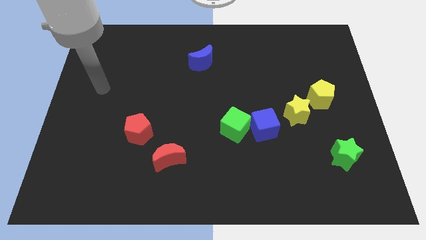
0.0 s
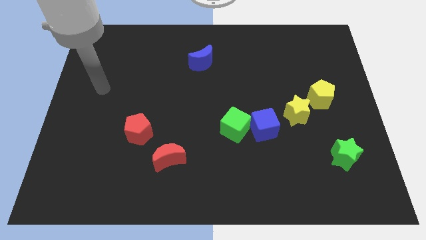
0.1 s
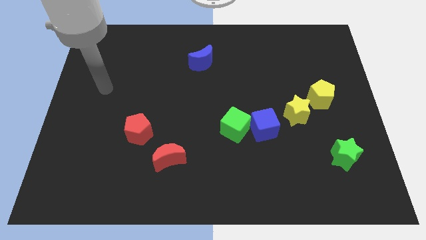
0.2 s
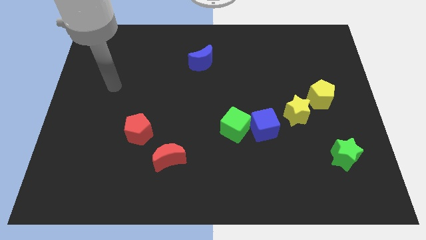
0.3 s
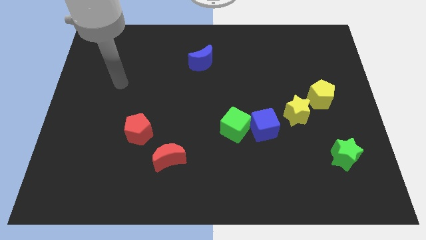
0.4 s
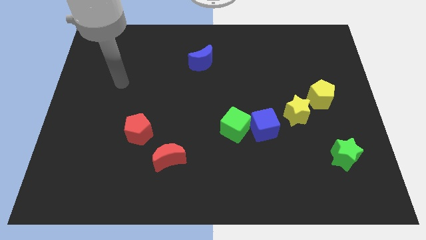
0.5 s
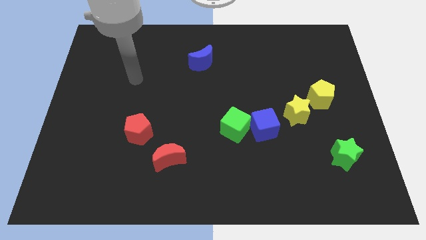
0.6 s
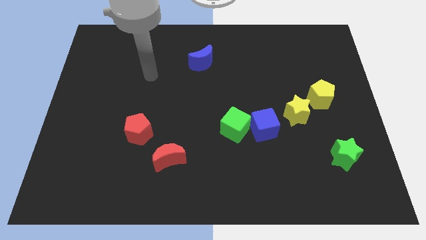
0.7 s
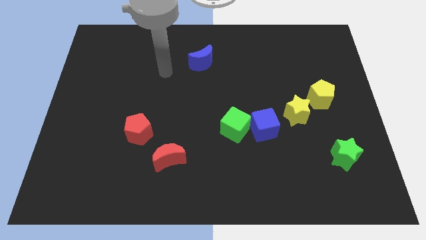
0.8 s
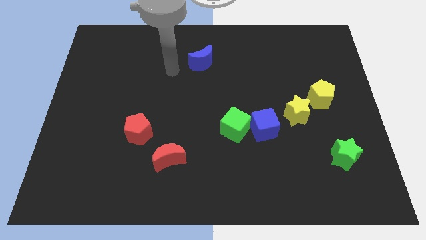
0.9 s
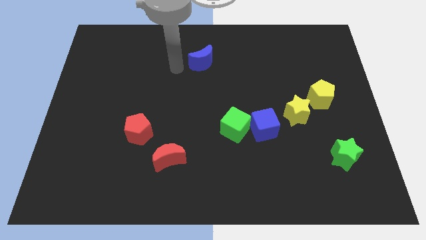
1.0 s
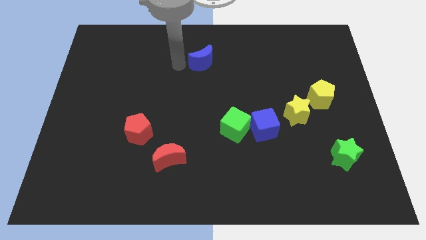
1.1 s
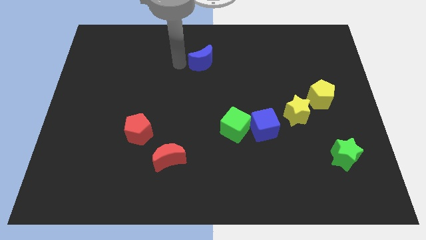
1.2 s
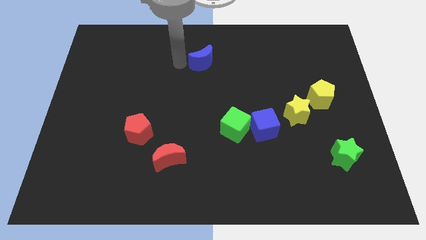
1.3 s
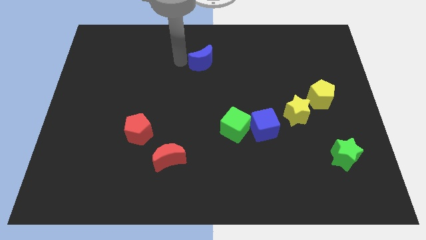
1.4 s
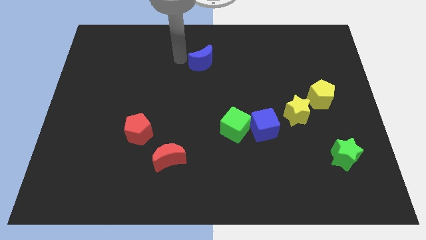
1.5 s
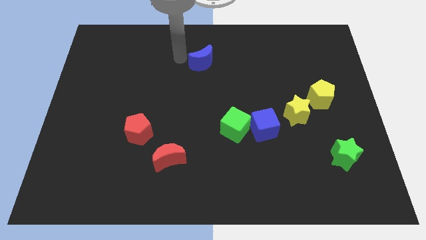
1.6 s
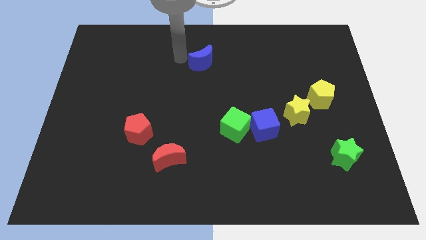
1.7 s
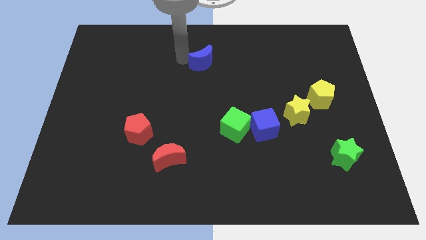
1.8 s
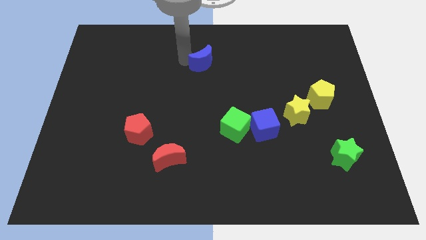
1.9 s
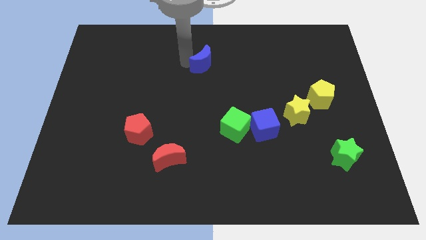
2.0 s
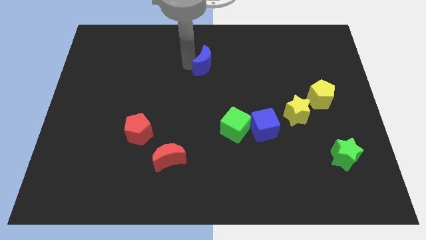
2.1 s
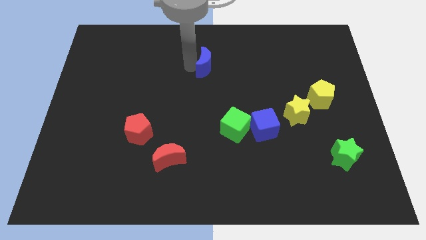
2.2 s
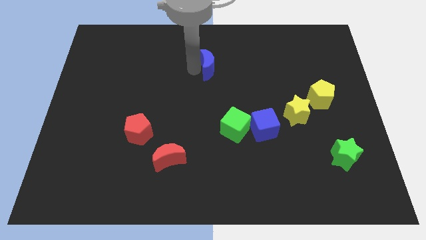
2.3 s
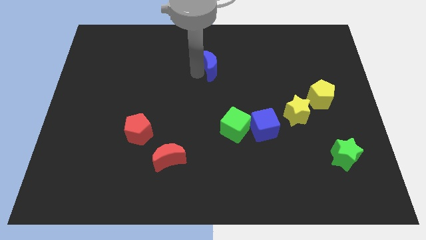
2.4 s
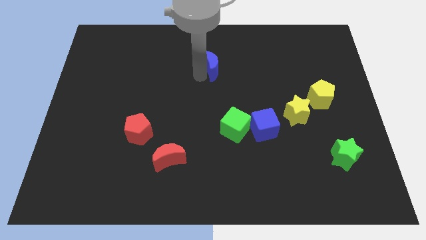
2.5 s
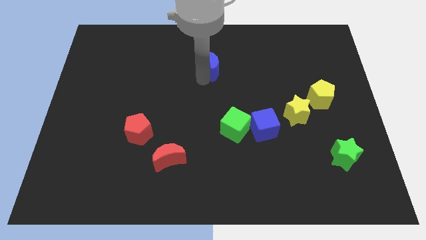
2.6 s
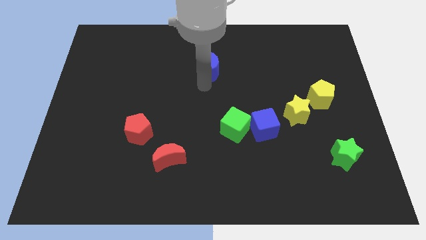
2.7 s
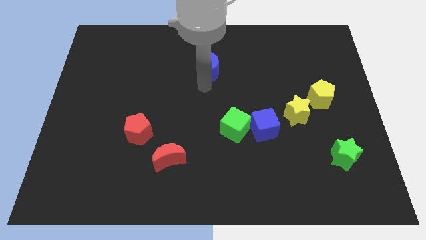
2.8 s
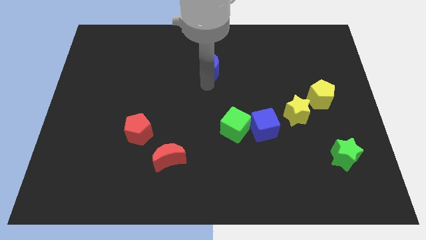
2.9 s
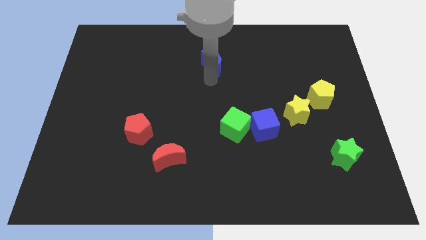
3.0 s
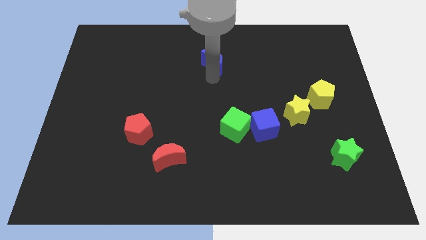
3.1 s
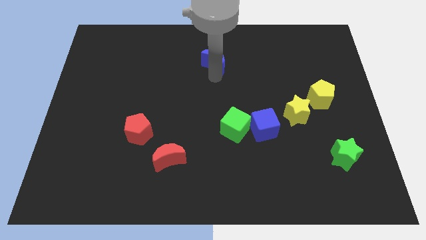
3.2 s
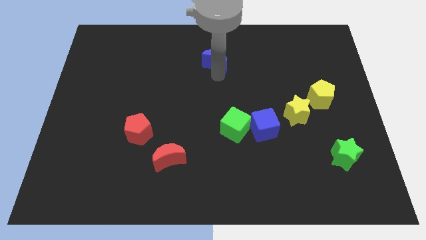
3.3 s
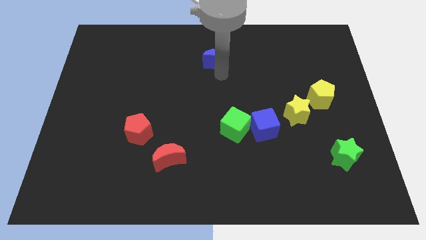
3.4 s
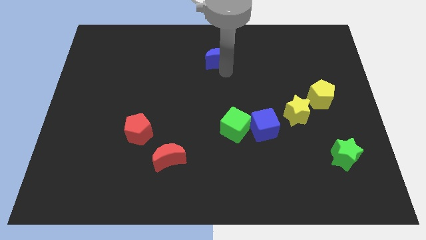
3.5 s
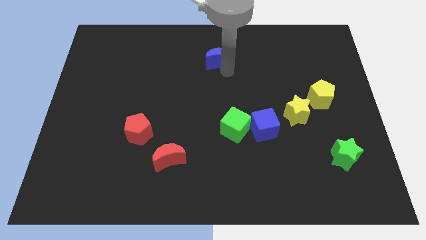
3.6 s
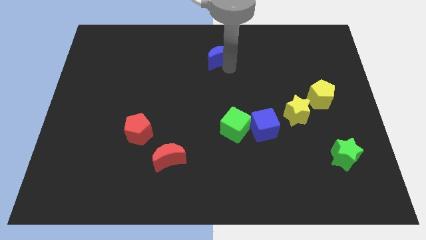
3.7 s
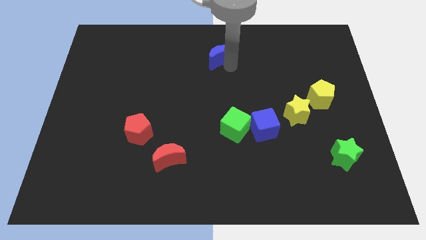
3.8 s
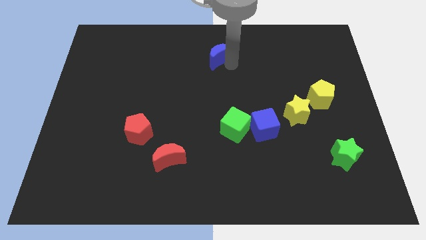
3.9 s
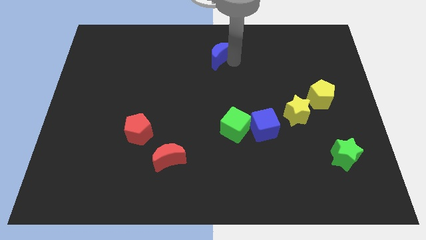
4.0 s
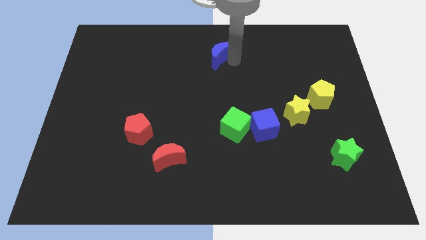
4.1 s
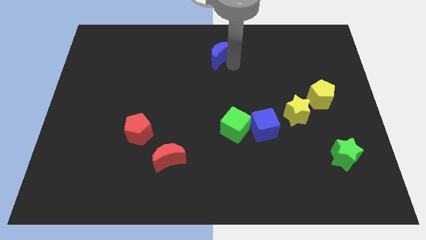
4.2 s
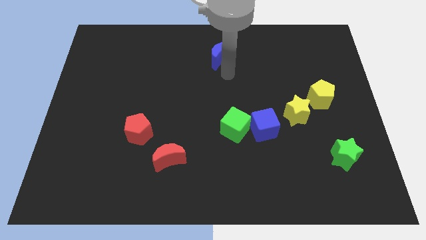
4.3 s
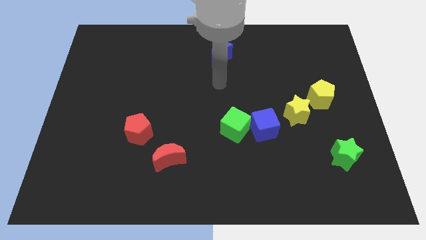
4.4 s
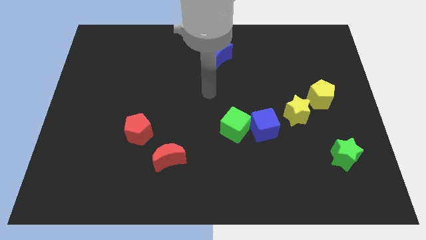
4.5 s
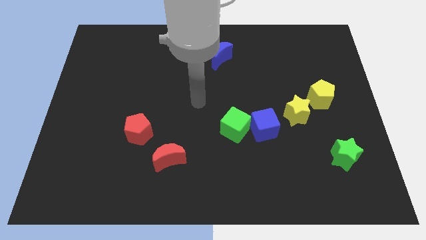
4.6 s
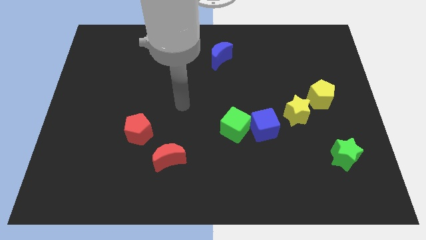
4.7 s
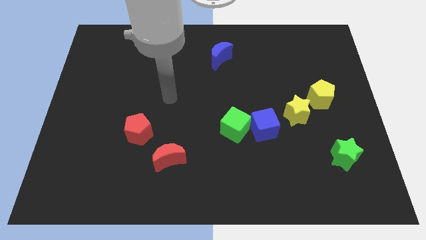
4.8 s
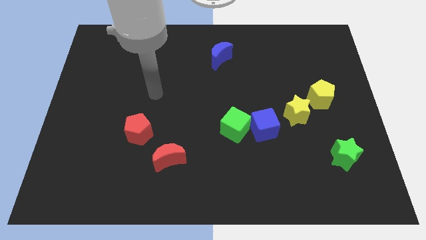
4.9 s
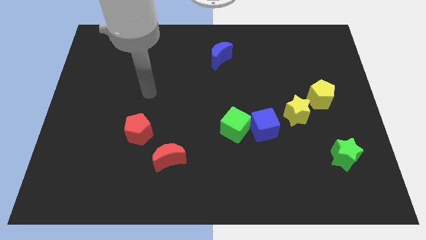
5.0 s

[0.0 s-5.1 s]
place the blue moon at the top center

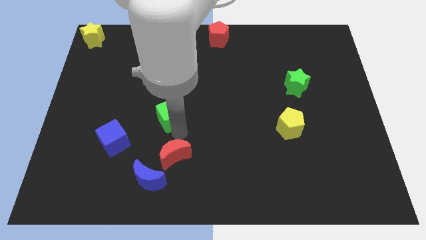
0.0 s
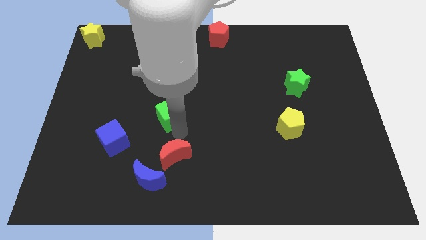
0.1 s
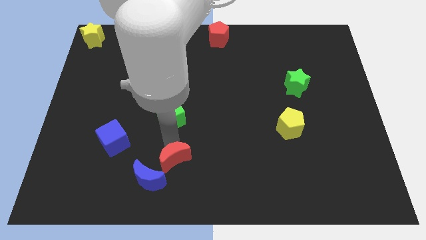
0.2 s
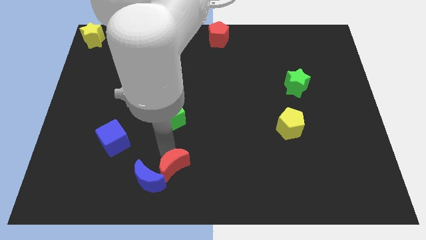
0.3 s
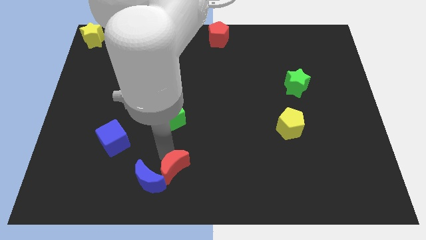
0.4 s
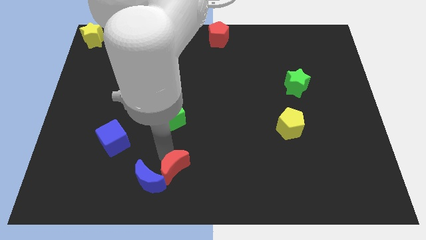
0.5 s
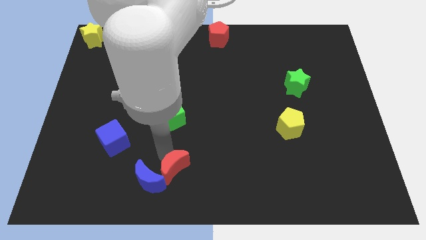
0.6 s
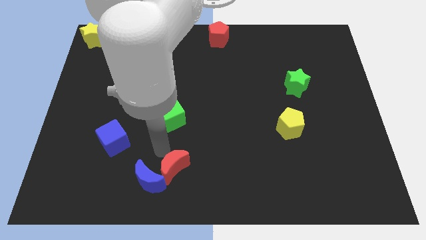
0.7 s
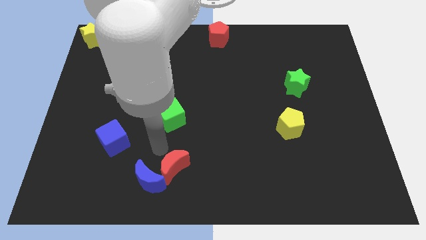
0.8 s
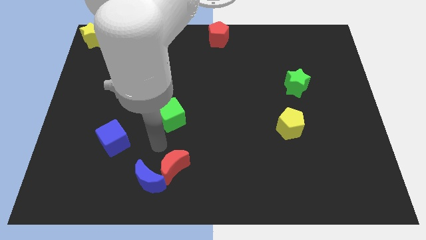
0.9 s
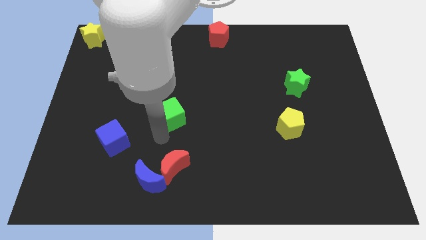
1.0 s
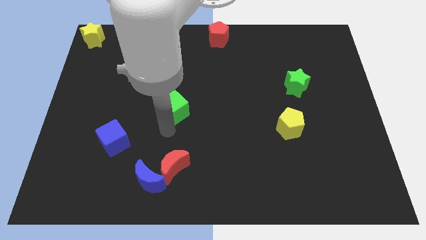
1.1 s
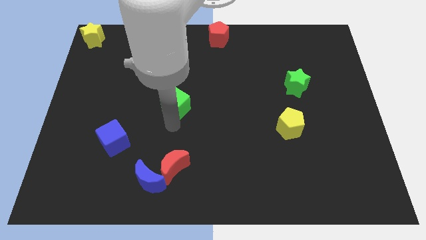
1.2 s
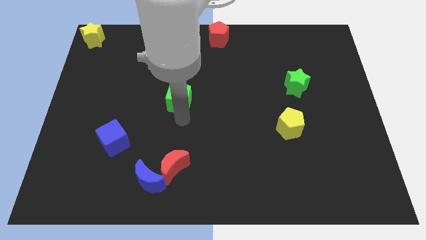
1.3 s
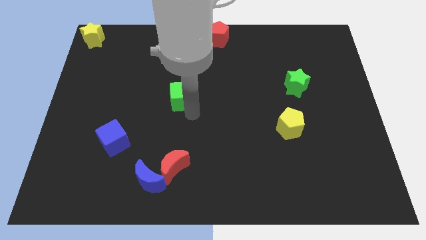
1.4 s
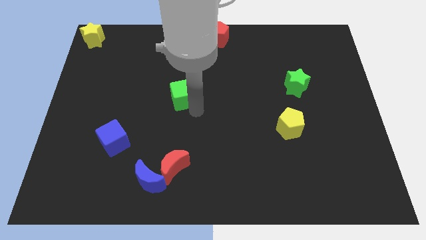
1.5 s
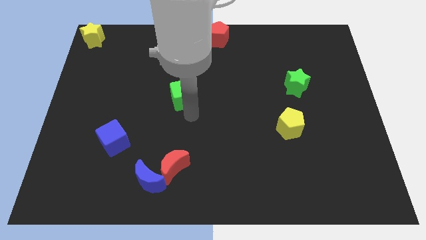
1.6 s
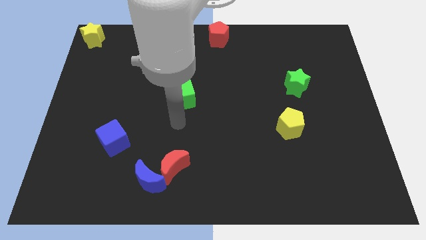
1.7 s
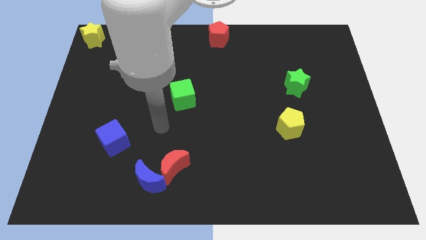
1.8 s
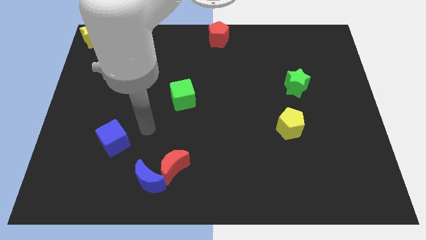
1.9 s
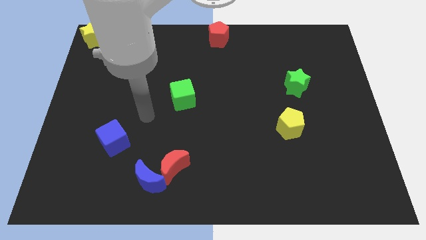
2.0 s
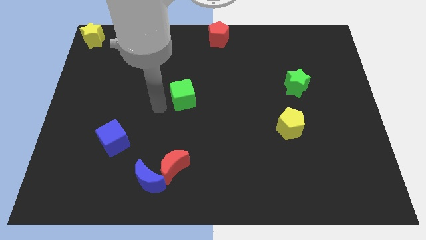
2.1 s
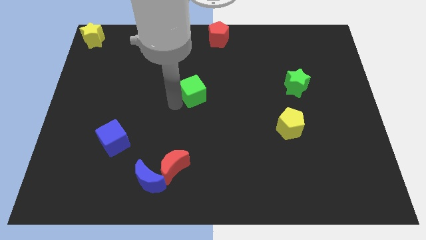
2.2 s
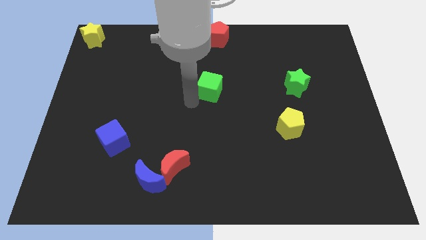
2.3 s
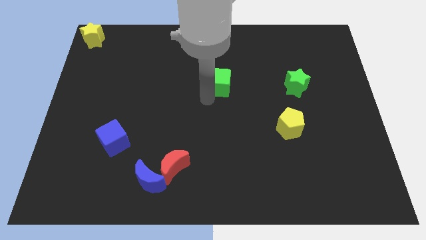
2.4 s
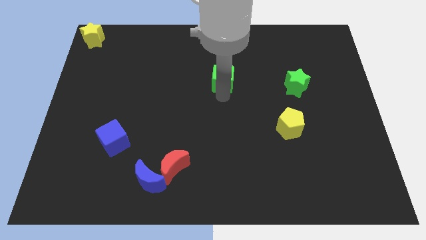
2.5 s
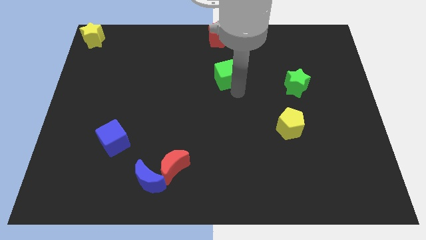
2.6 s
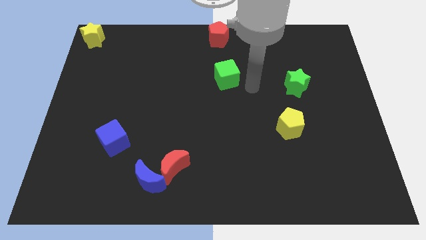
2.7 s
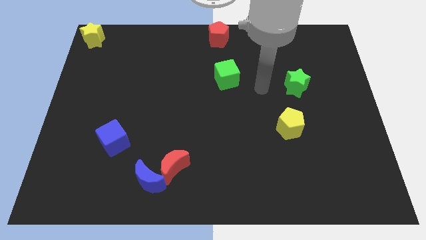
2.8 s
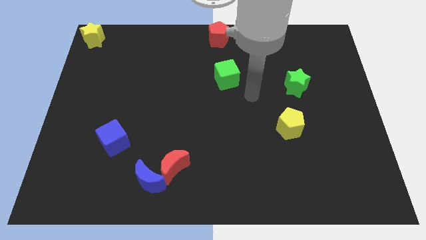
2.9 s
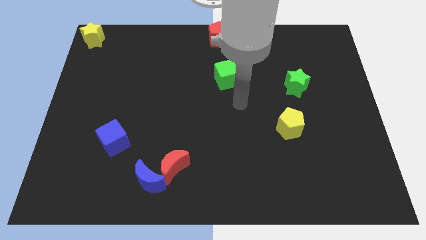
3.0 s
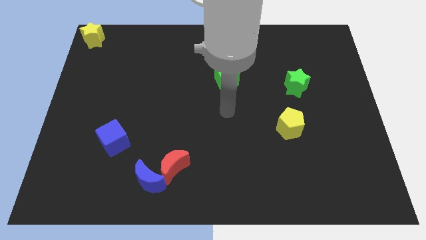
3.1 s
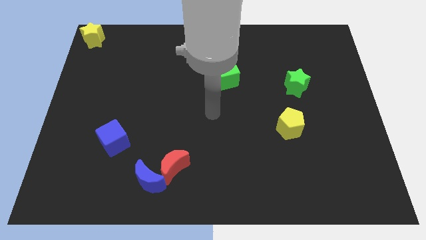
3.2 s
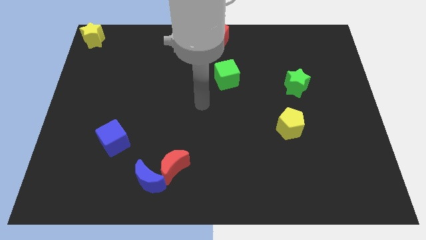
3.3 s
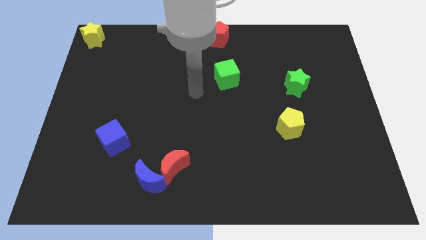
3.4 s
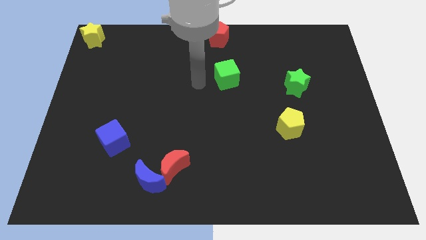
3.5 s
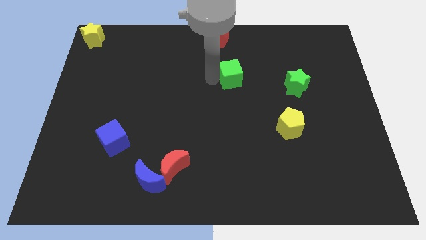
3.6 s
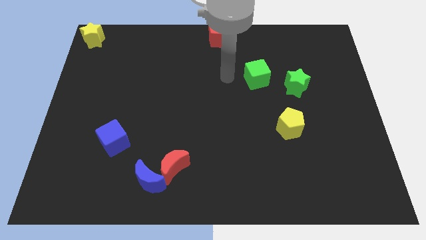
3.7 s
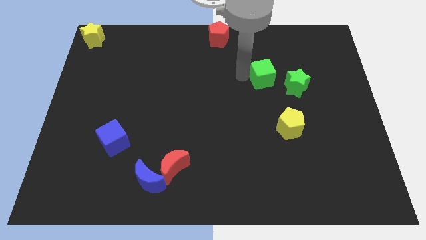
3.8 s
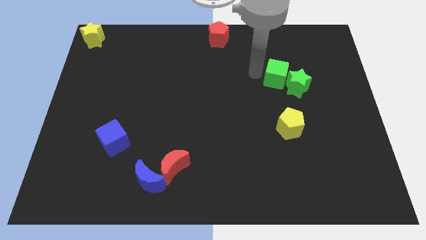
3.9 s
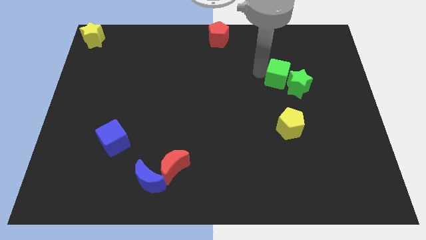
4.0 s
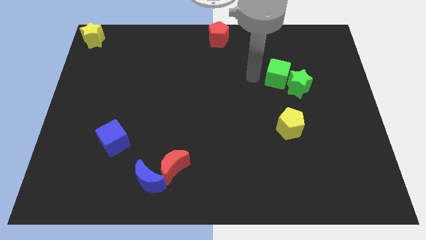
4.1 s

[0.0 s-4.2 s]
push the green cube into the green star
